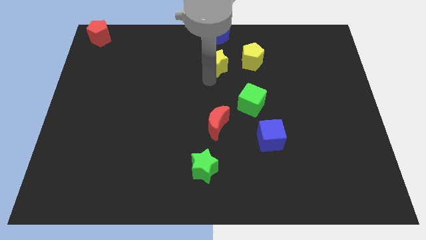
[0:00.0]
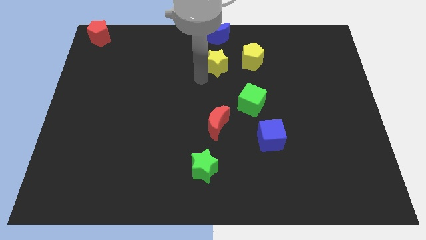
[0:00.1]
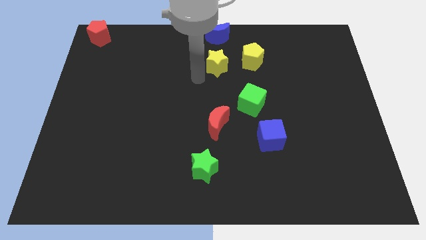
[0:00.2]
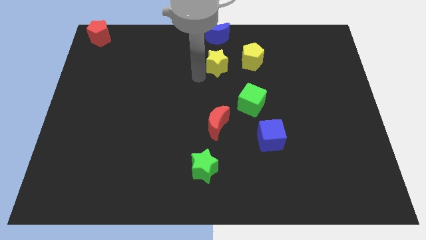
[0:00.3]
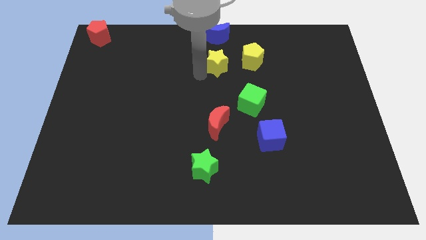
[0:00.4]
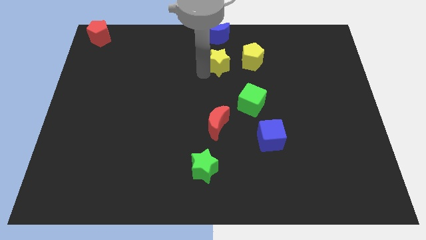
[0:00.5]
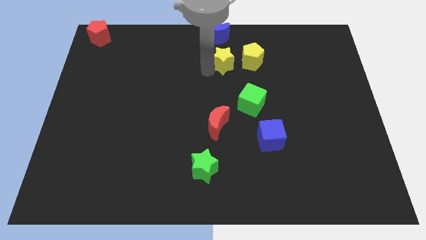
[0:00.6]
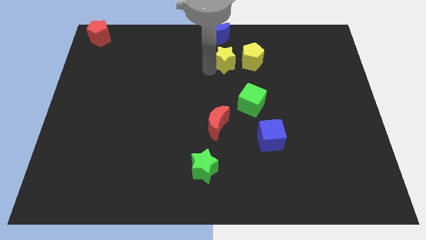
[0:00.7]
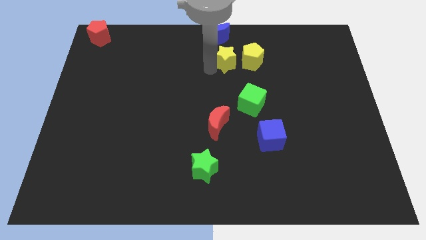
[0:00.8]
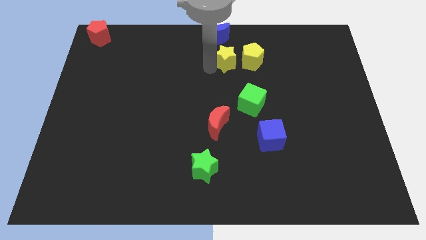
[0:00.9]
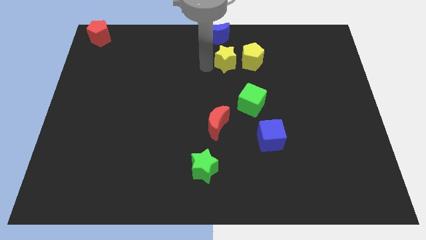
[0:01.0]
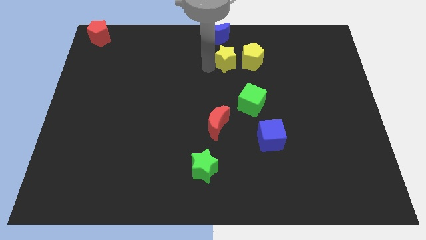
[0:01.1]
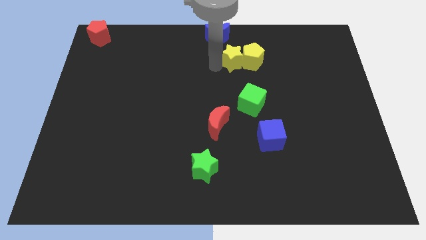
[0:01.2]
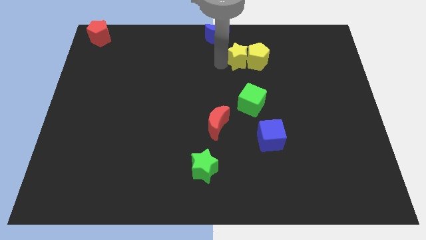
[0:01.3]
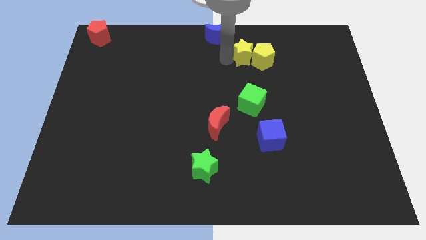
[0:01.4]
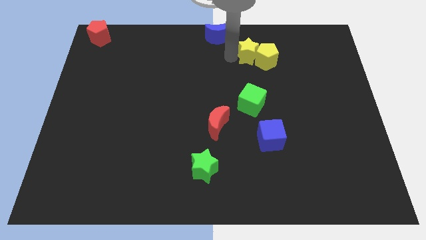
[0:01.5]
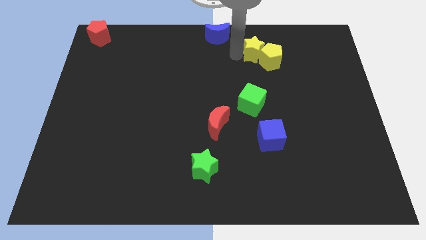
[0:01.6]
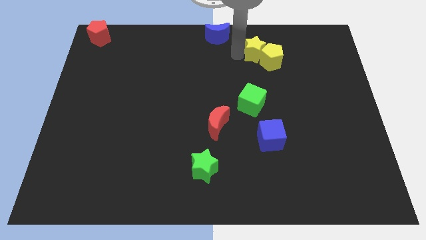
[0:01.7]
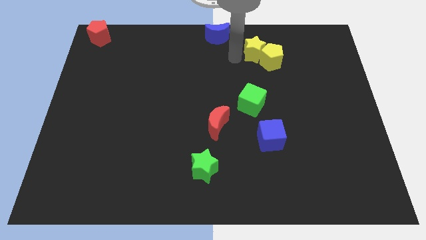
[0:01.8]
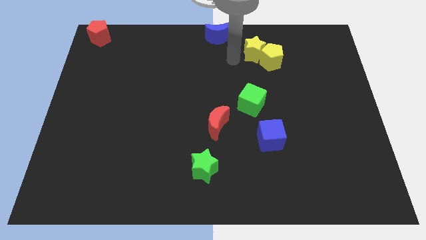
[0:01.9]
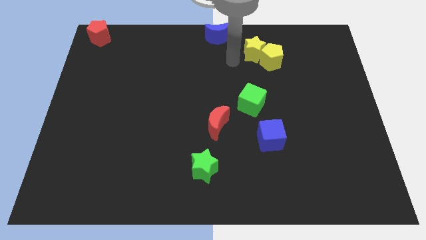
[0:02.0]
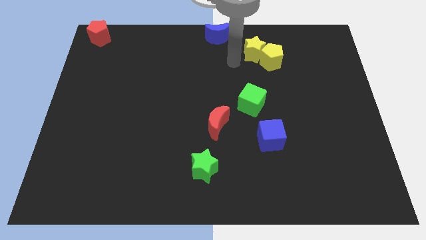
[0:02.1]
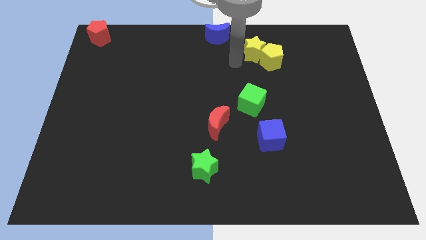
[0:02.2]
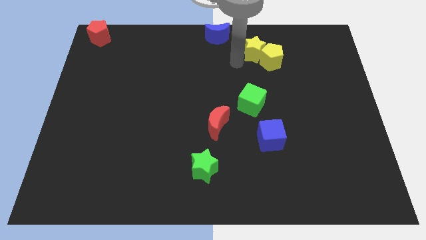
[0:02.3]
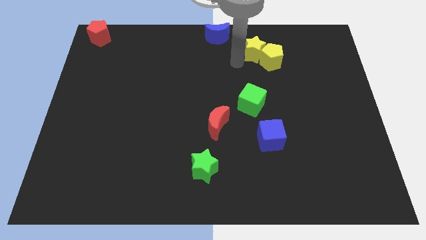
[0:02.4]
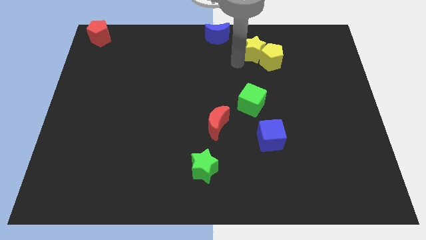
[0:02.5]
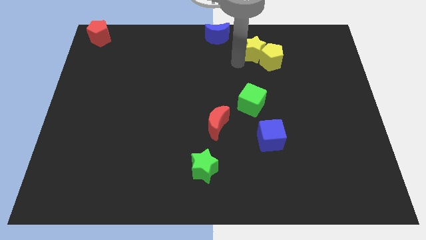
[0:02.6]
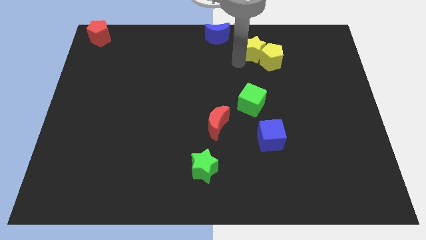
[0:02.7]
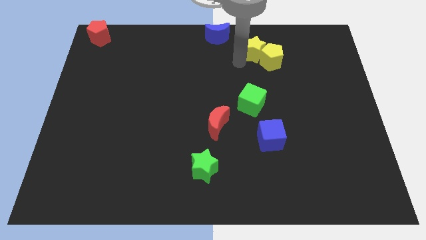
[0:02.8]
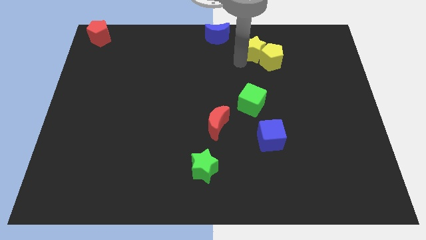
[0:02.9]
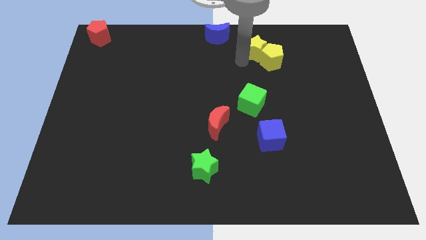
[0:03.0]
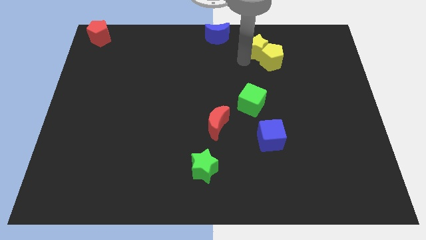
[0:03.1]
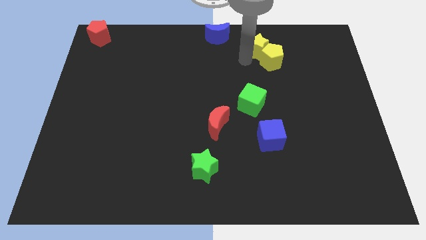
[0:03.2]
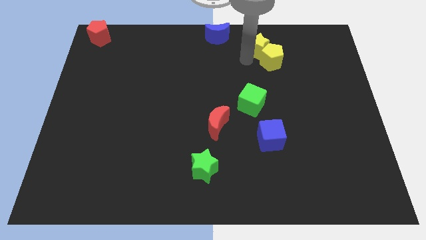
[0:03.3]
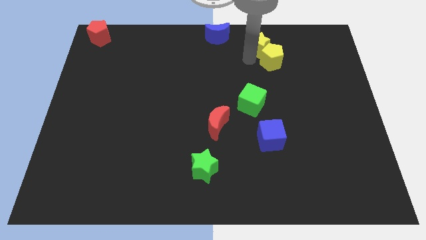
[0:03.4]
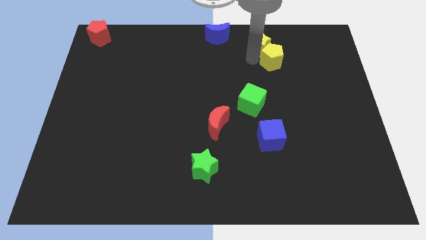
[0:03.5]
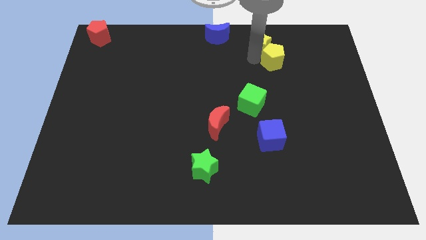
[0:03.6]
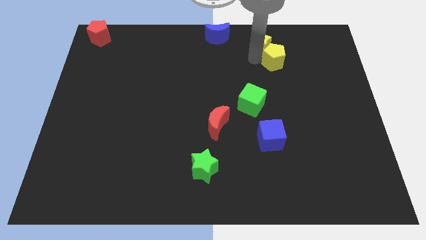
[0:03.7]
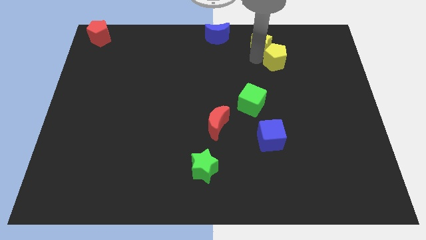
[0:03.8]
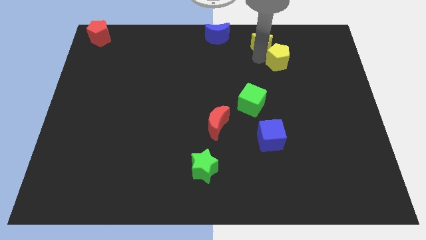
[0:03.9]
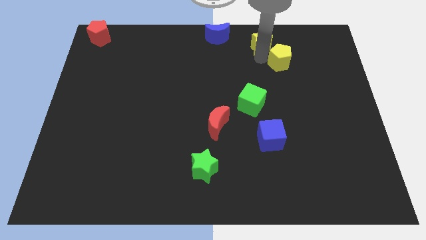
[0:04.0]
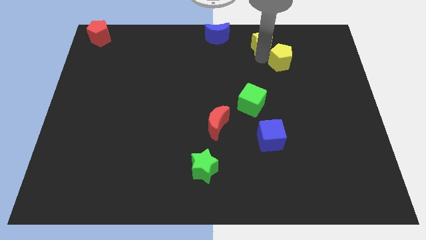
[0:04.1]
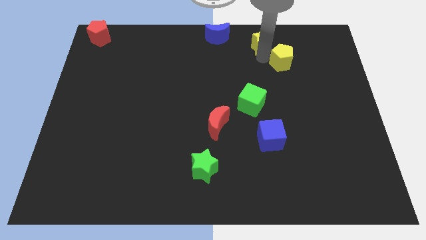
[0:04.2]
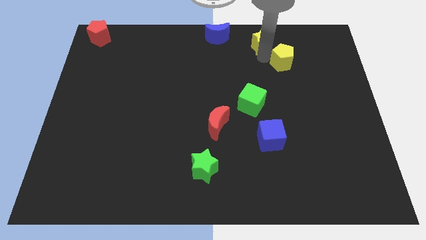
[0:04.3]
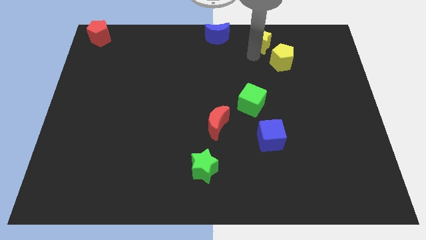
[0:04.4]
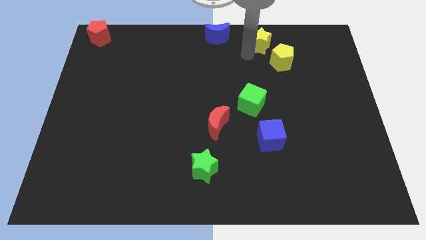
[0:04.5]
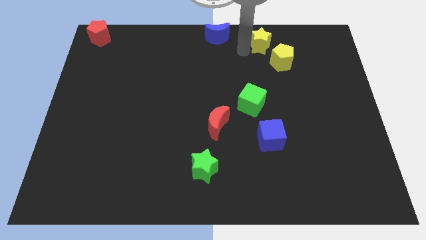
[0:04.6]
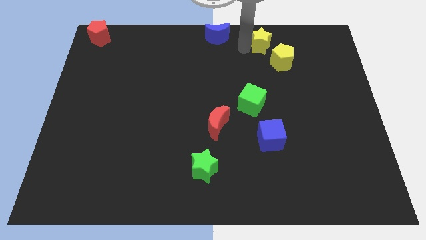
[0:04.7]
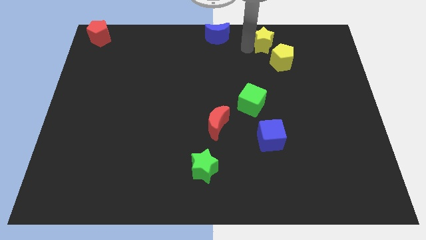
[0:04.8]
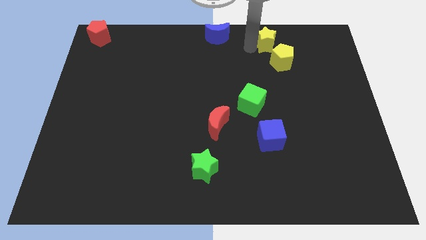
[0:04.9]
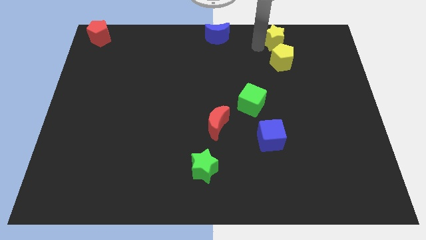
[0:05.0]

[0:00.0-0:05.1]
push the yellow star into the yellow pentagon towards the right top of the board

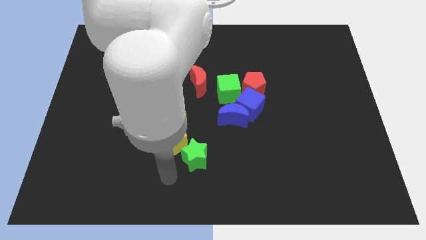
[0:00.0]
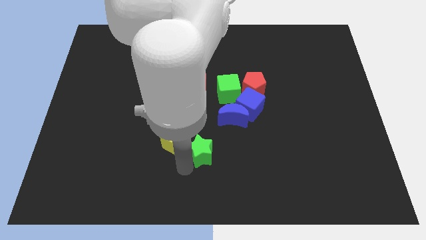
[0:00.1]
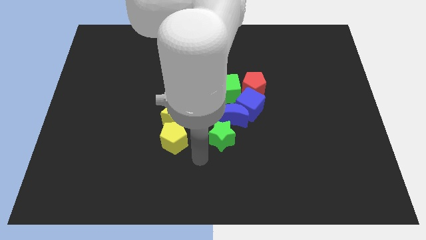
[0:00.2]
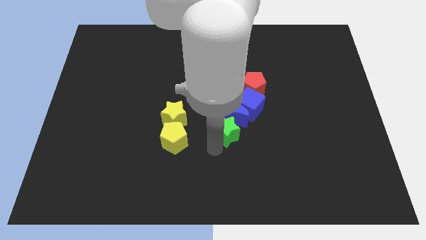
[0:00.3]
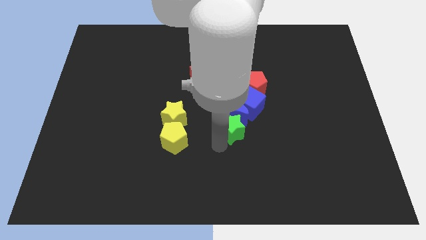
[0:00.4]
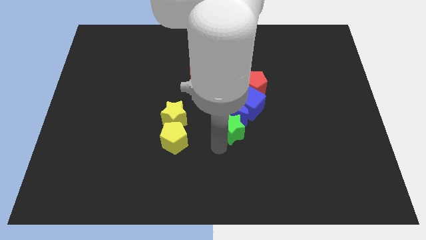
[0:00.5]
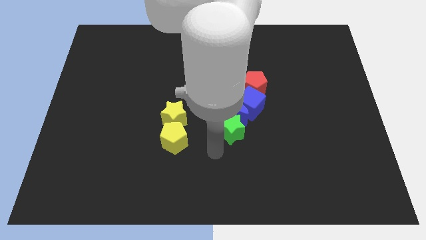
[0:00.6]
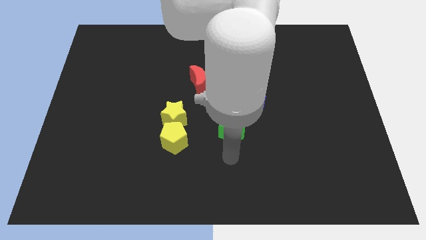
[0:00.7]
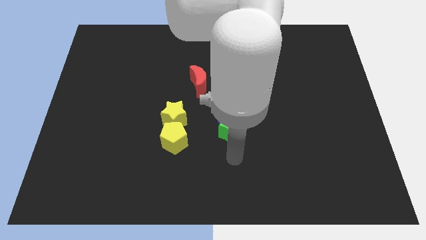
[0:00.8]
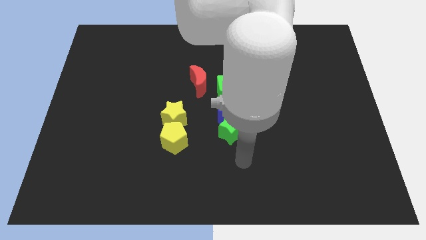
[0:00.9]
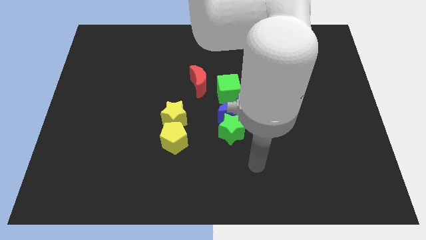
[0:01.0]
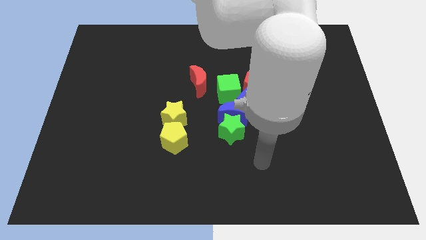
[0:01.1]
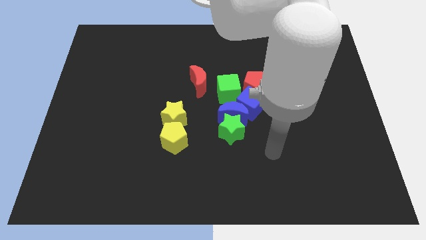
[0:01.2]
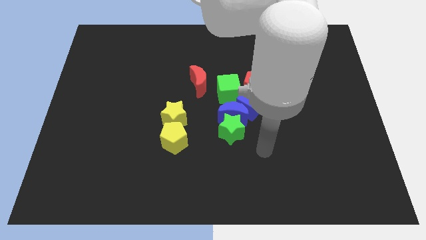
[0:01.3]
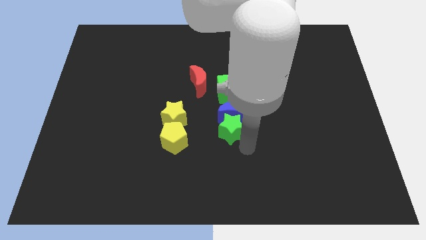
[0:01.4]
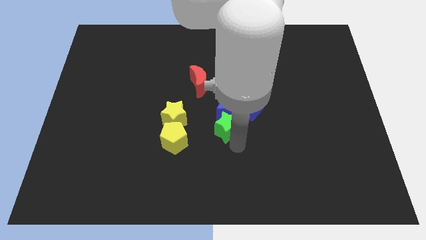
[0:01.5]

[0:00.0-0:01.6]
push the green star into the blue crescent

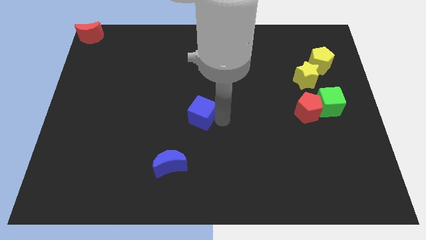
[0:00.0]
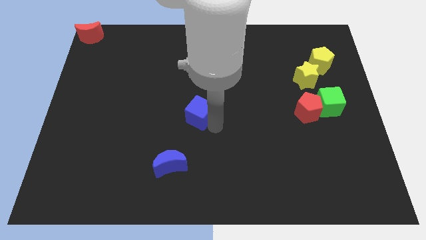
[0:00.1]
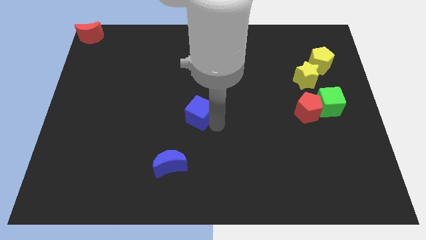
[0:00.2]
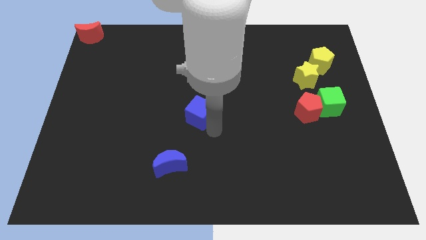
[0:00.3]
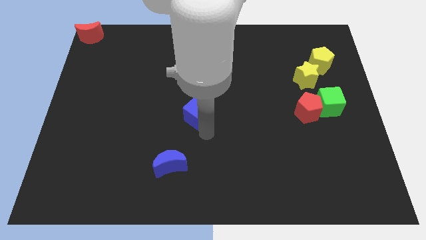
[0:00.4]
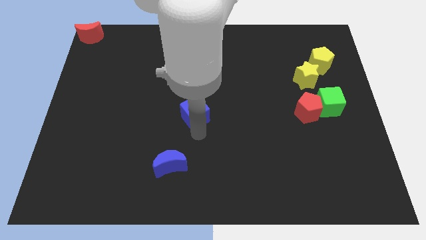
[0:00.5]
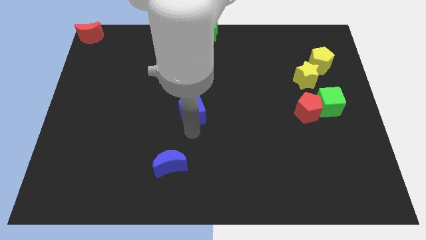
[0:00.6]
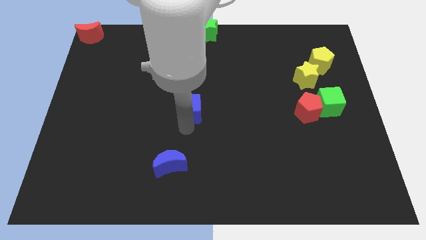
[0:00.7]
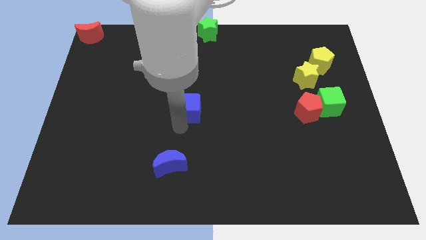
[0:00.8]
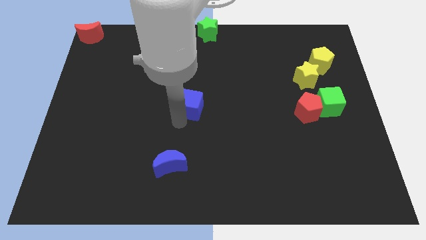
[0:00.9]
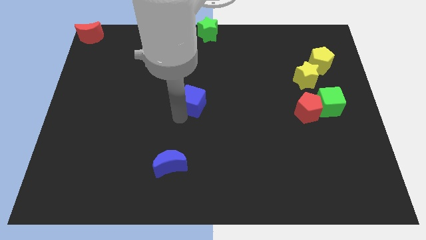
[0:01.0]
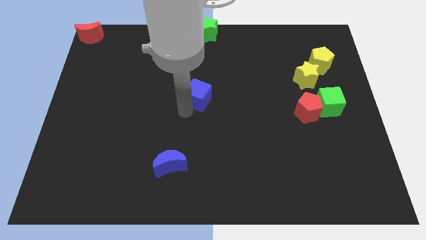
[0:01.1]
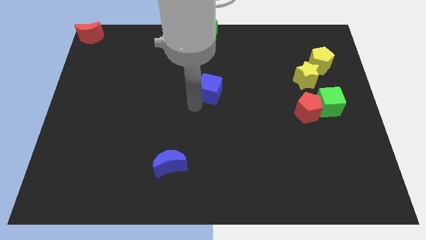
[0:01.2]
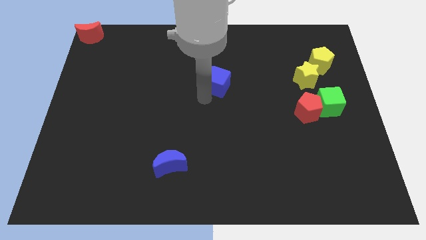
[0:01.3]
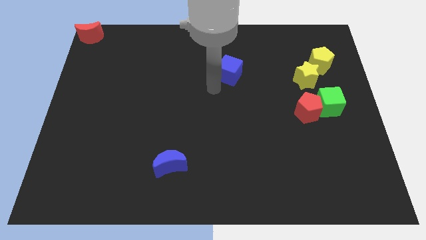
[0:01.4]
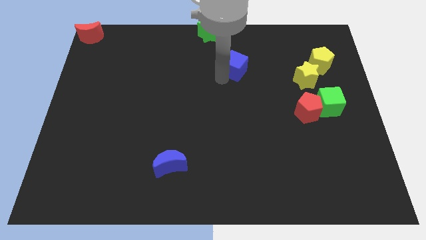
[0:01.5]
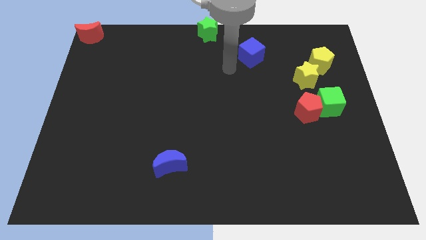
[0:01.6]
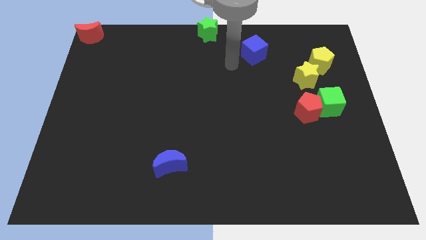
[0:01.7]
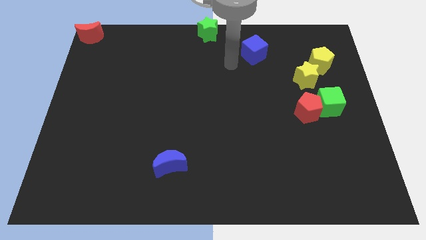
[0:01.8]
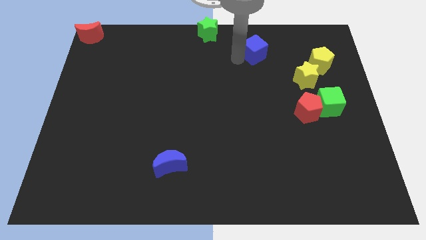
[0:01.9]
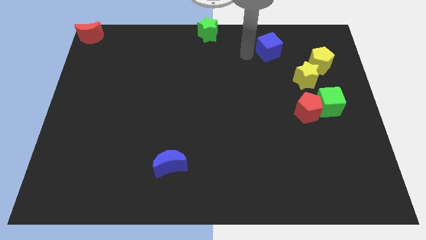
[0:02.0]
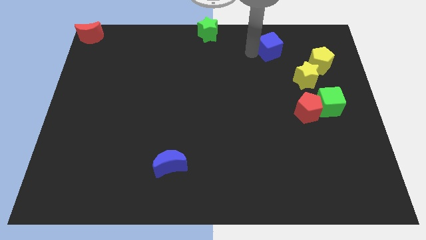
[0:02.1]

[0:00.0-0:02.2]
slide the blue cube in between the green star and yellow pentagon
